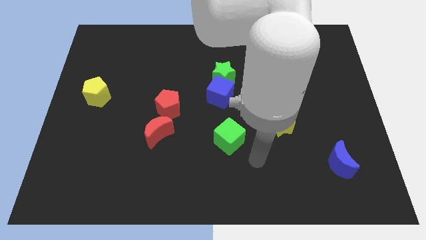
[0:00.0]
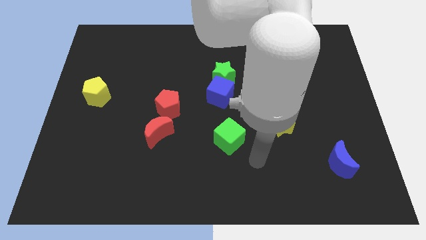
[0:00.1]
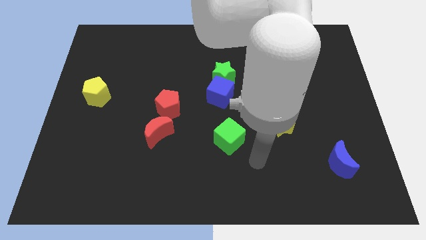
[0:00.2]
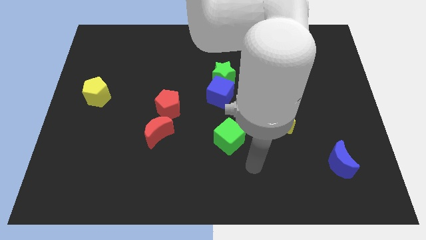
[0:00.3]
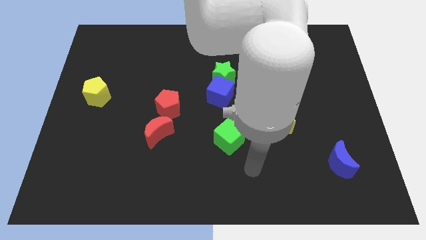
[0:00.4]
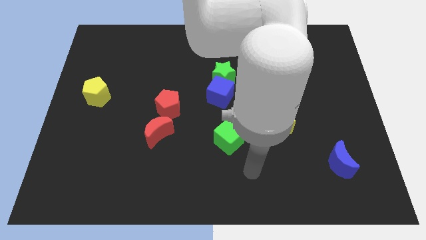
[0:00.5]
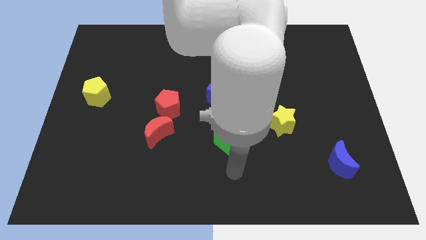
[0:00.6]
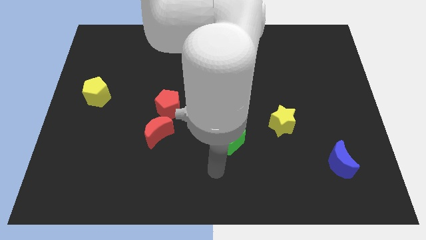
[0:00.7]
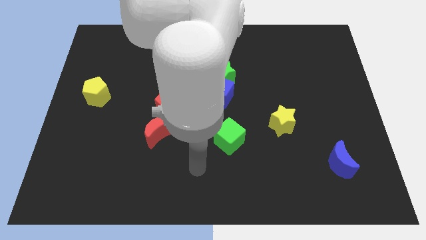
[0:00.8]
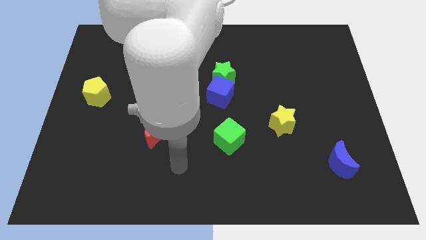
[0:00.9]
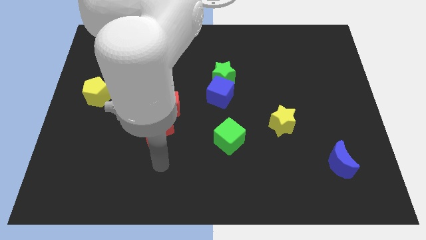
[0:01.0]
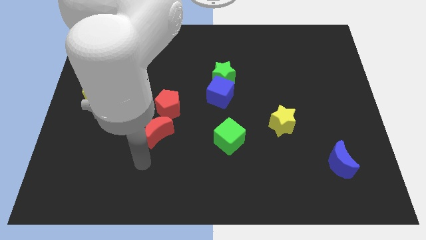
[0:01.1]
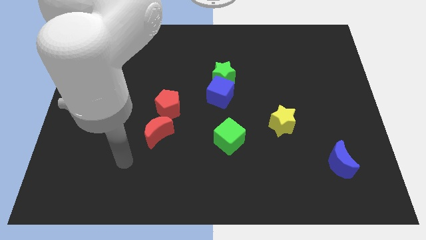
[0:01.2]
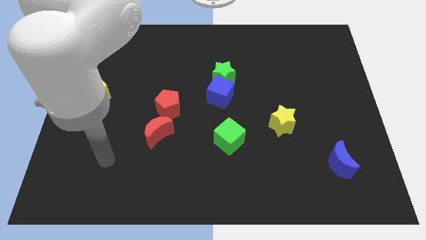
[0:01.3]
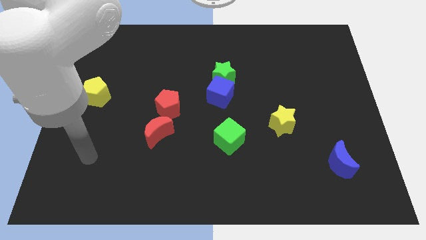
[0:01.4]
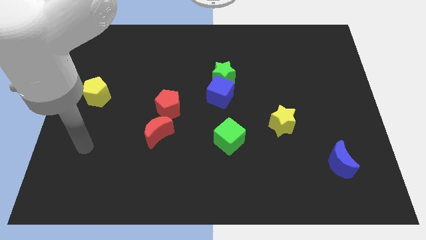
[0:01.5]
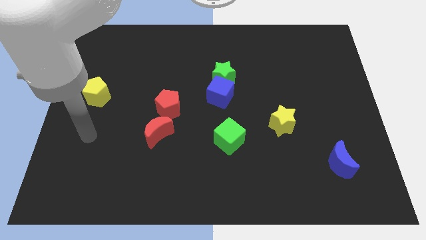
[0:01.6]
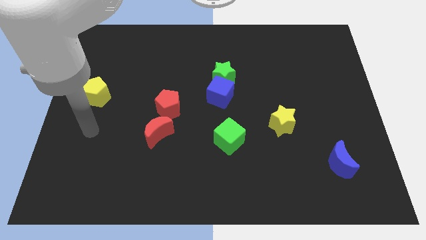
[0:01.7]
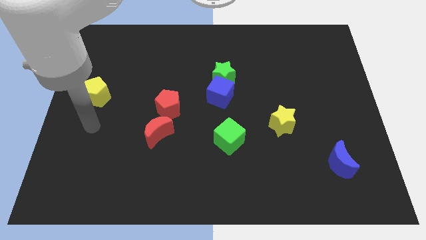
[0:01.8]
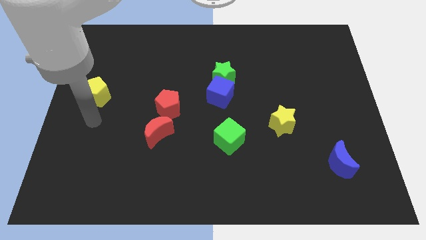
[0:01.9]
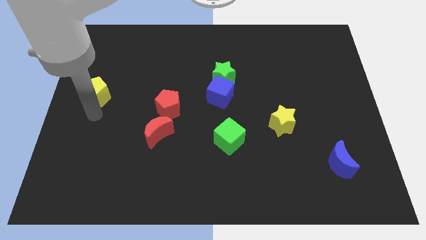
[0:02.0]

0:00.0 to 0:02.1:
push the arm below the yellow pentagon

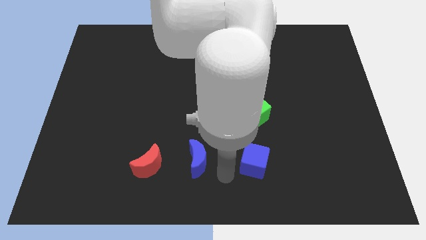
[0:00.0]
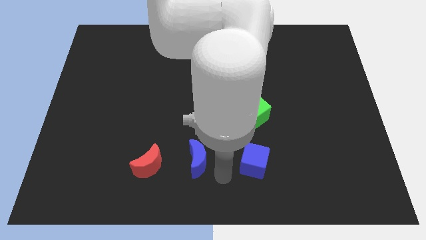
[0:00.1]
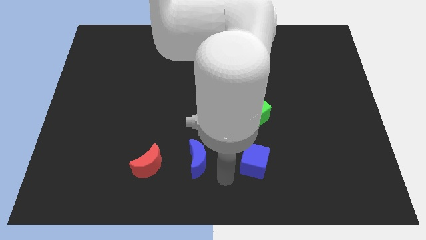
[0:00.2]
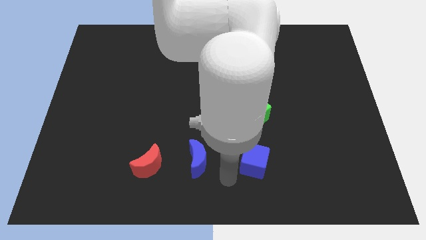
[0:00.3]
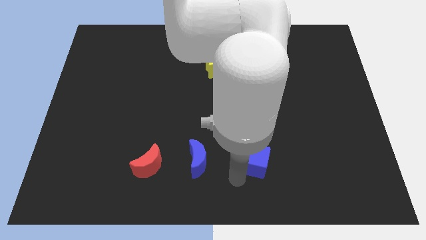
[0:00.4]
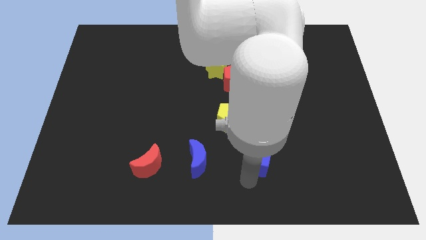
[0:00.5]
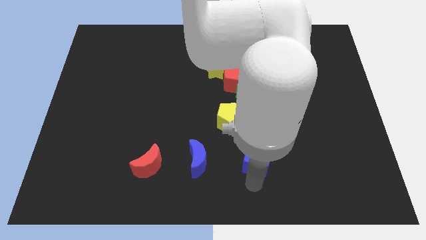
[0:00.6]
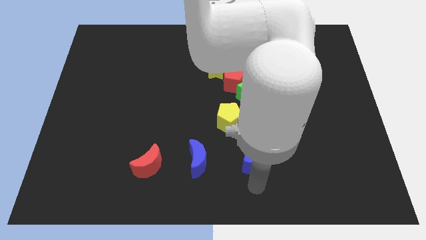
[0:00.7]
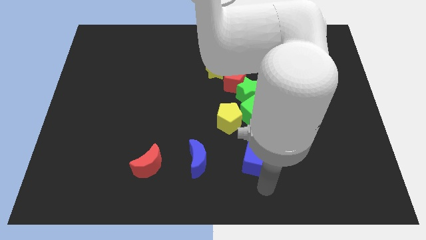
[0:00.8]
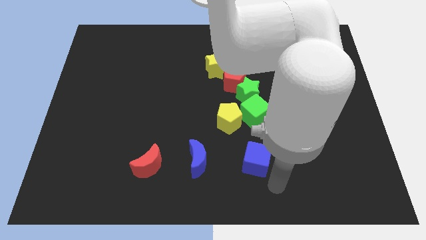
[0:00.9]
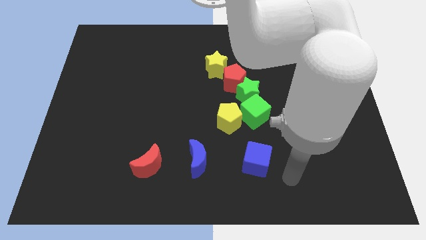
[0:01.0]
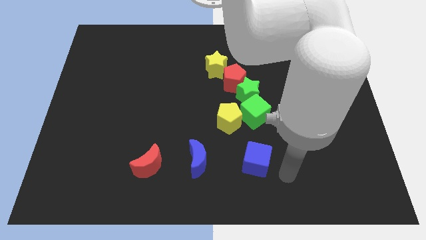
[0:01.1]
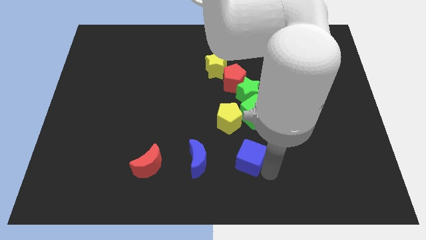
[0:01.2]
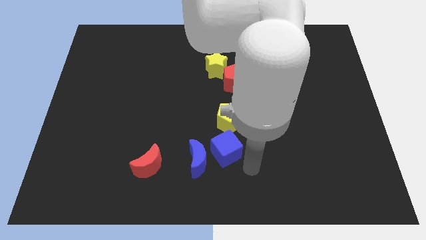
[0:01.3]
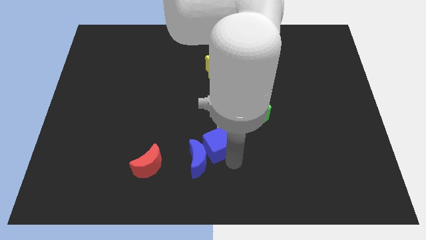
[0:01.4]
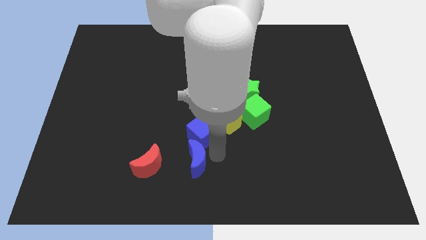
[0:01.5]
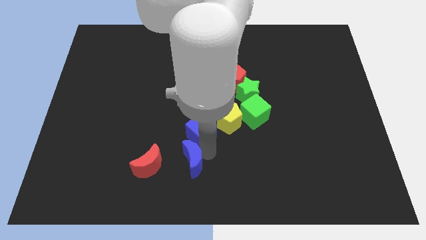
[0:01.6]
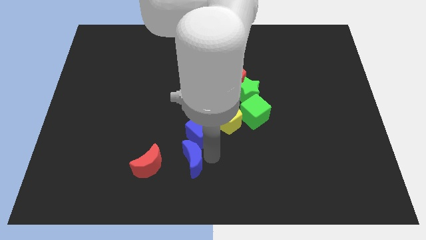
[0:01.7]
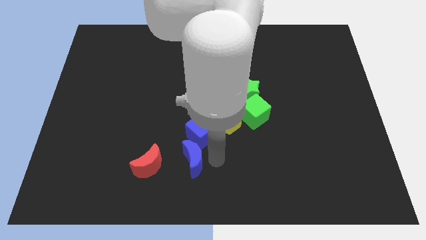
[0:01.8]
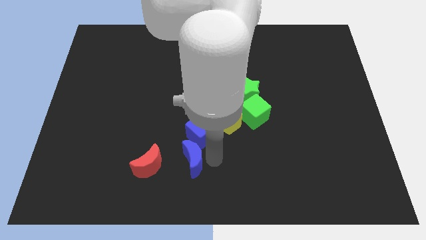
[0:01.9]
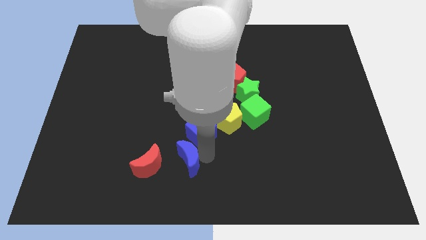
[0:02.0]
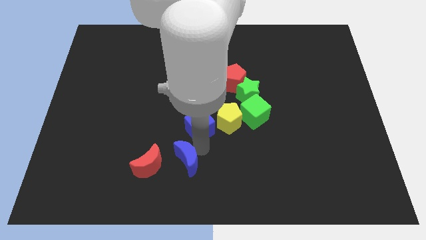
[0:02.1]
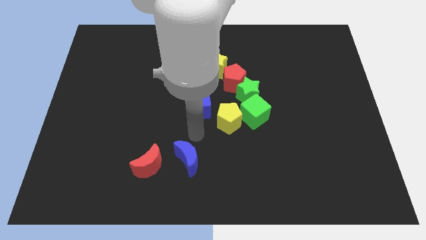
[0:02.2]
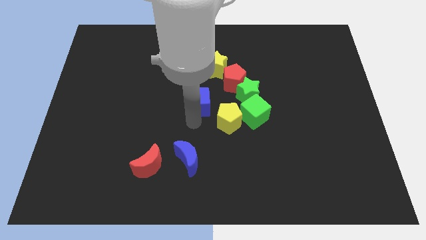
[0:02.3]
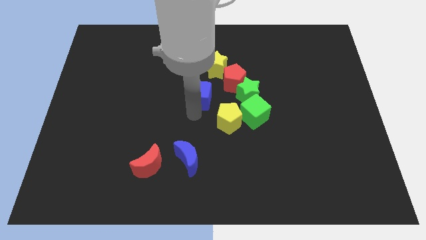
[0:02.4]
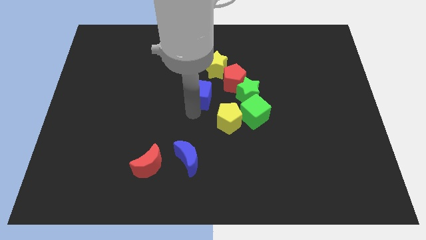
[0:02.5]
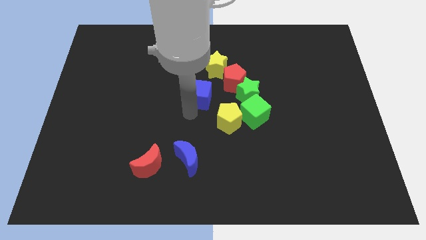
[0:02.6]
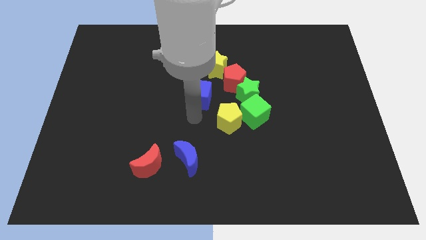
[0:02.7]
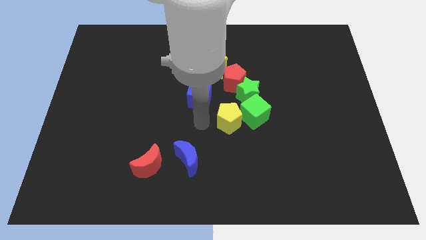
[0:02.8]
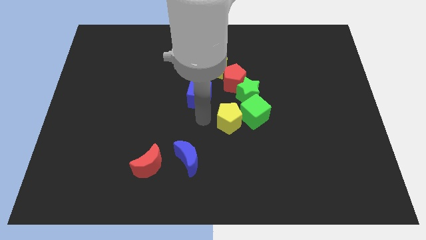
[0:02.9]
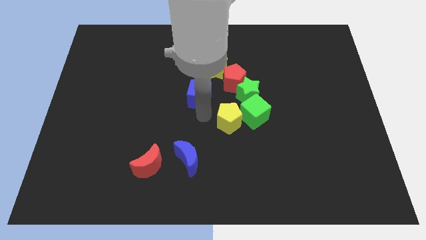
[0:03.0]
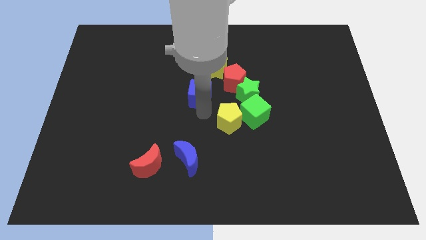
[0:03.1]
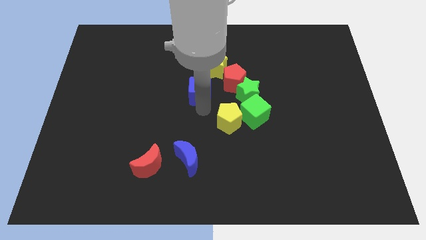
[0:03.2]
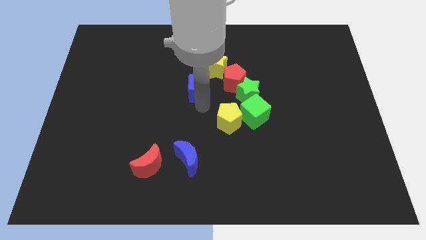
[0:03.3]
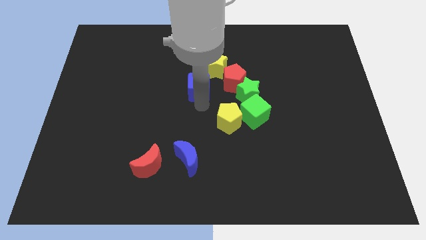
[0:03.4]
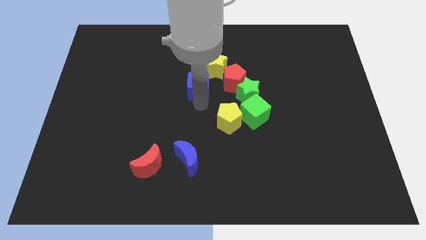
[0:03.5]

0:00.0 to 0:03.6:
put blue cube at center

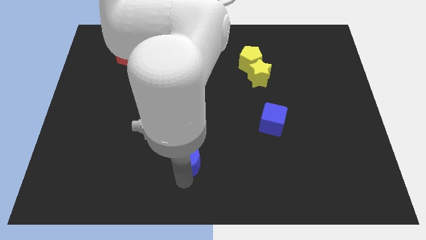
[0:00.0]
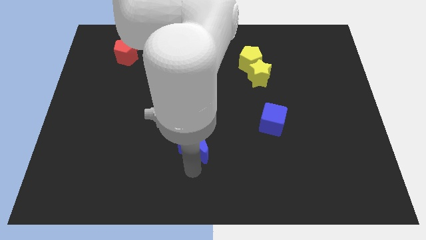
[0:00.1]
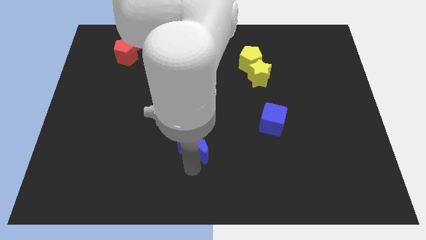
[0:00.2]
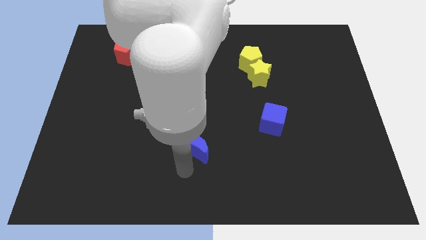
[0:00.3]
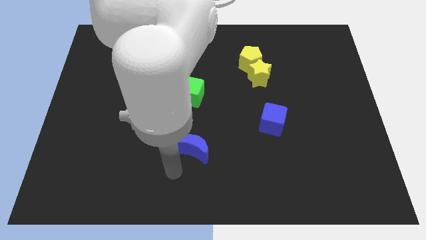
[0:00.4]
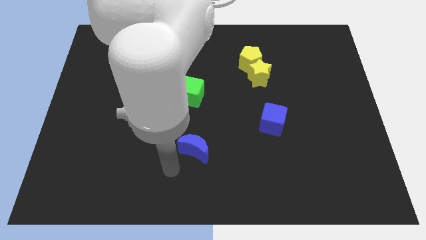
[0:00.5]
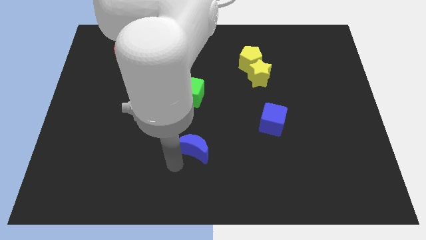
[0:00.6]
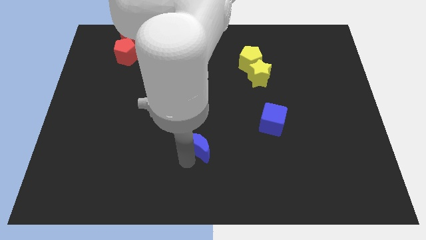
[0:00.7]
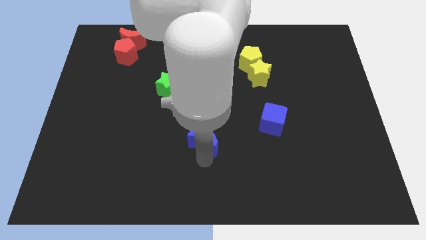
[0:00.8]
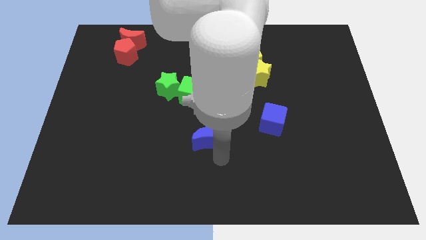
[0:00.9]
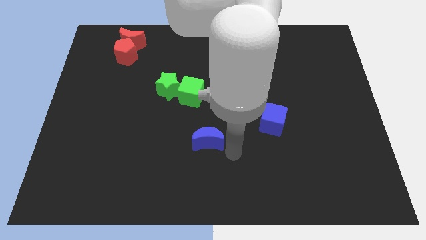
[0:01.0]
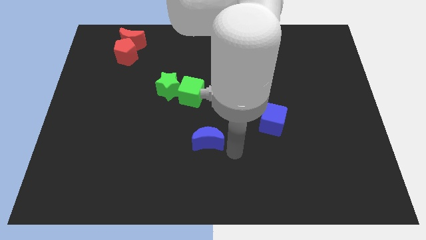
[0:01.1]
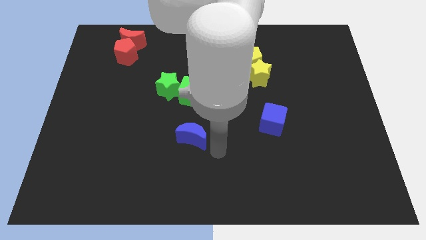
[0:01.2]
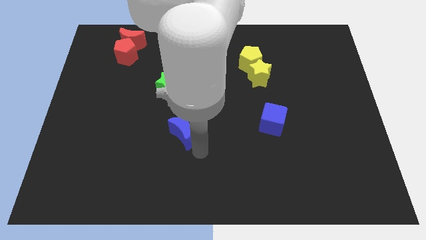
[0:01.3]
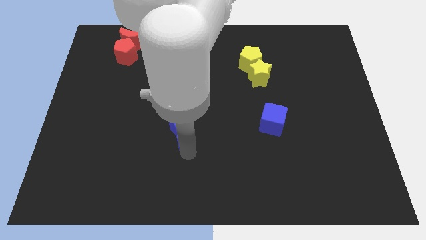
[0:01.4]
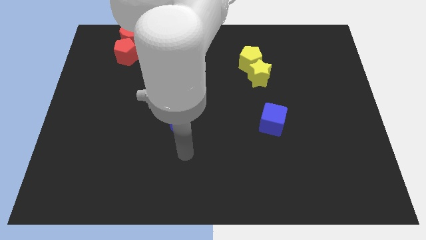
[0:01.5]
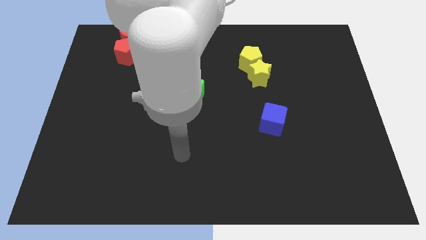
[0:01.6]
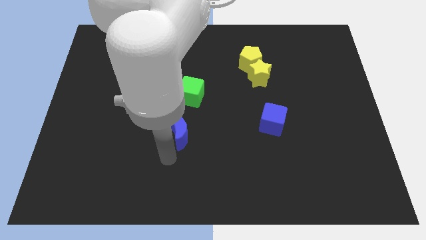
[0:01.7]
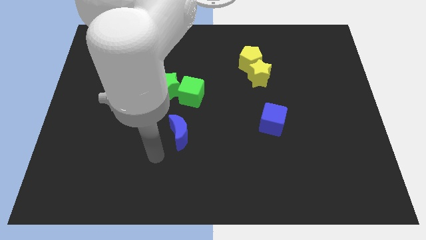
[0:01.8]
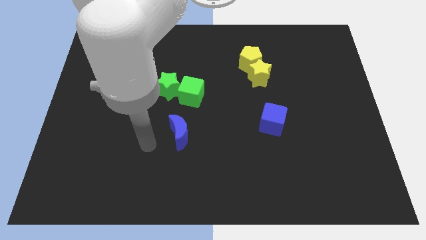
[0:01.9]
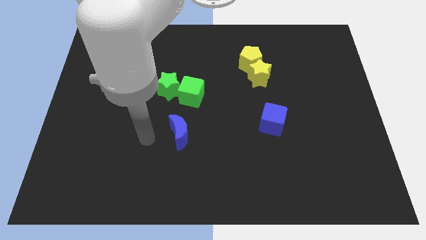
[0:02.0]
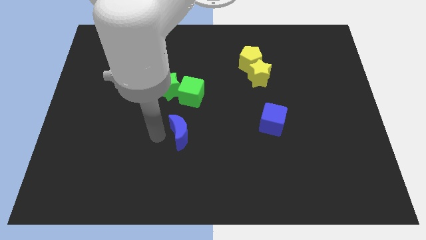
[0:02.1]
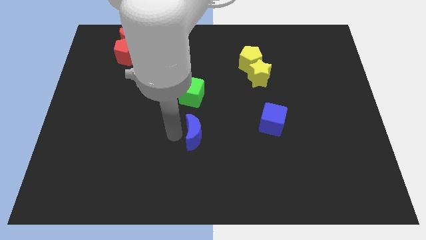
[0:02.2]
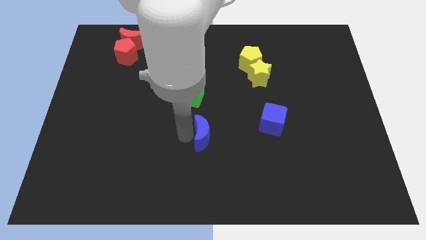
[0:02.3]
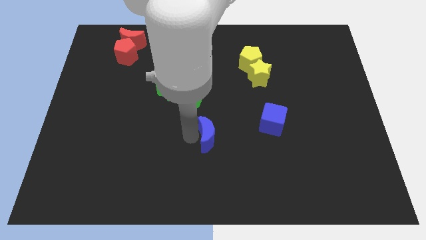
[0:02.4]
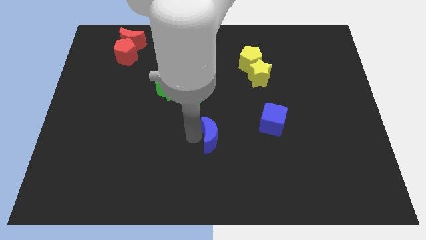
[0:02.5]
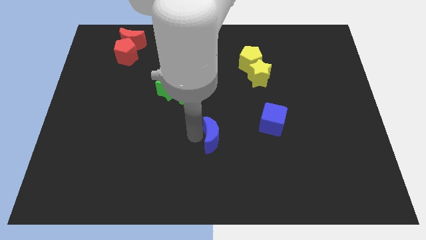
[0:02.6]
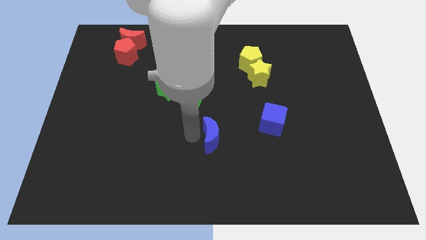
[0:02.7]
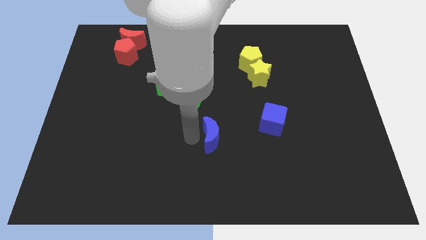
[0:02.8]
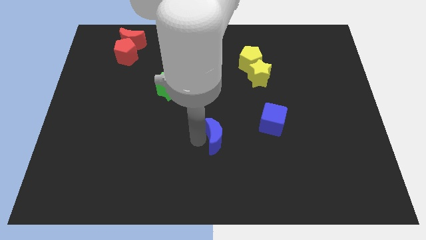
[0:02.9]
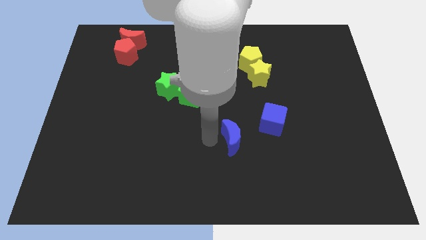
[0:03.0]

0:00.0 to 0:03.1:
place the blue crescent to the center
